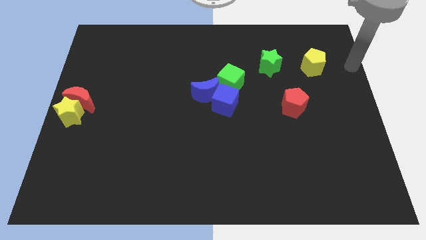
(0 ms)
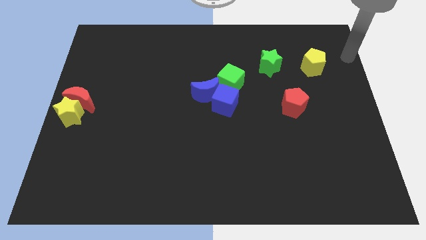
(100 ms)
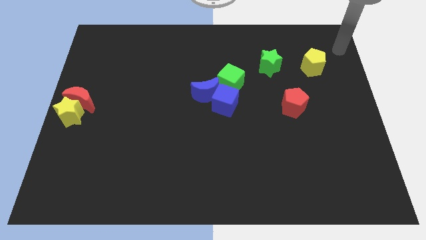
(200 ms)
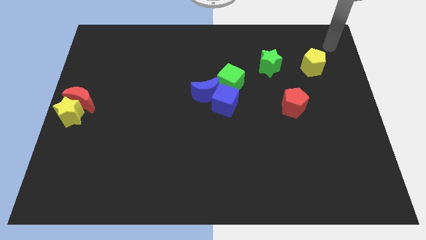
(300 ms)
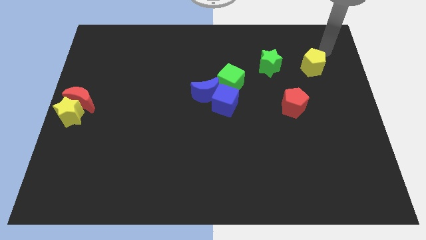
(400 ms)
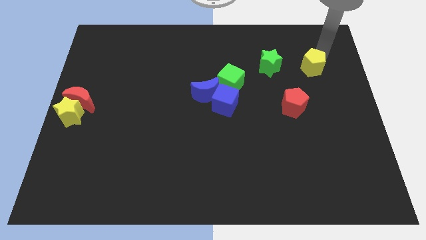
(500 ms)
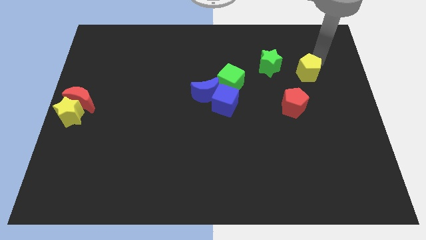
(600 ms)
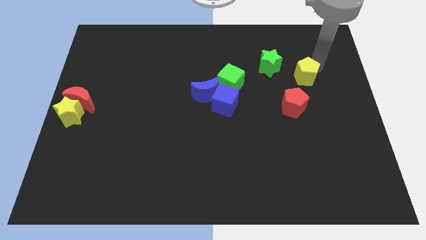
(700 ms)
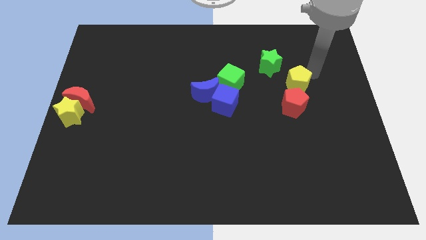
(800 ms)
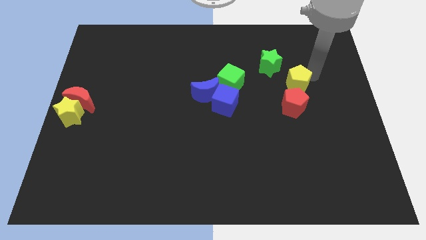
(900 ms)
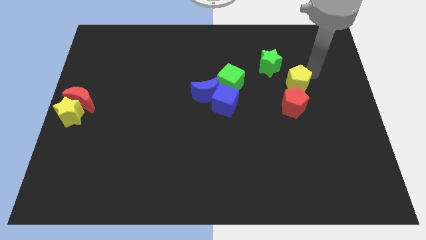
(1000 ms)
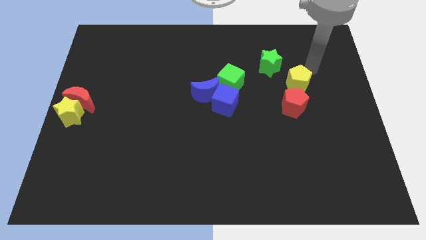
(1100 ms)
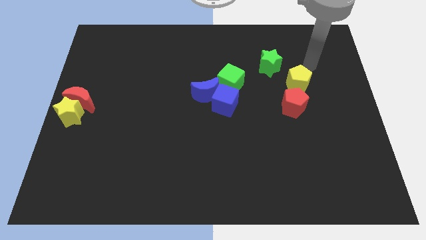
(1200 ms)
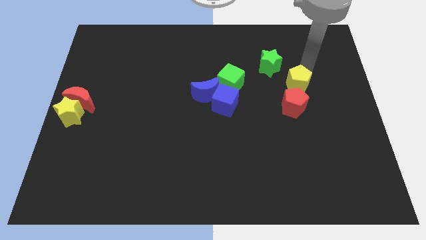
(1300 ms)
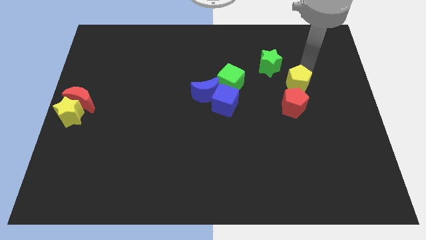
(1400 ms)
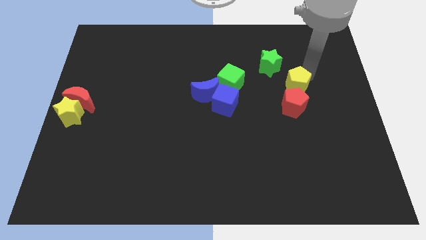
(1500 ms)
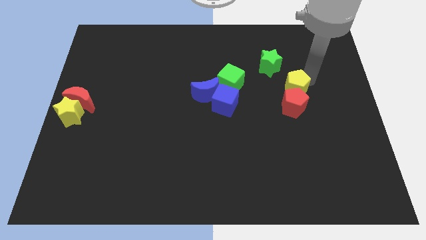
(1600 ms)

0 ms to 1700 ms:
push the yellow pentagon into red pentagon at the right center of the board

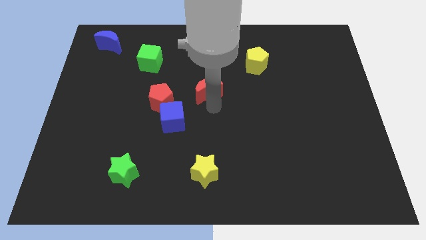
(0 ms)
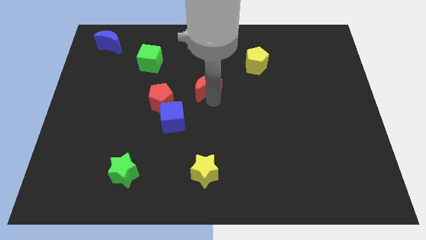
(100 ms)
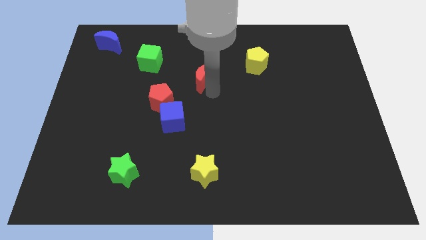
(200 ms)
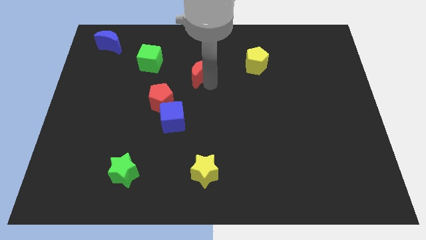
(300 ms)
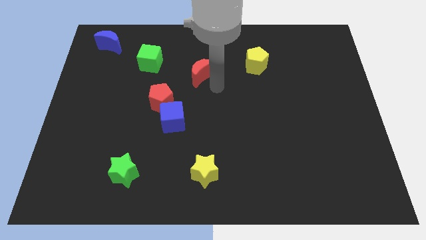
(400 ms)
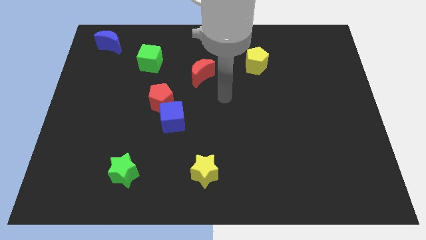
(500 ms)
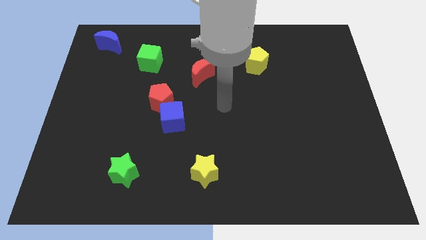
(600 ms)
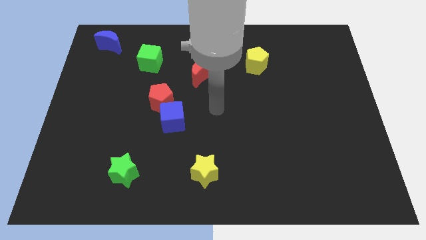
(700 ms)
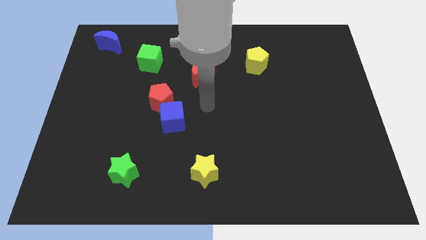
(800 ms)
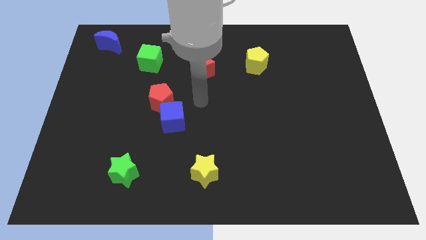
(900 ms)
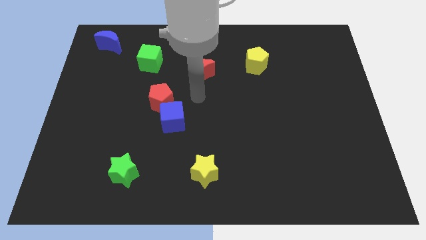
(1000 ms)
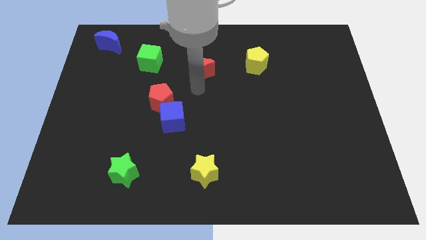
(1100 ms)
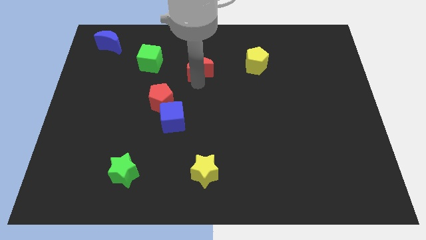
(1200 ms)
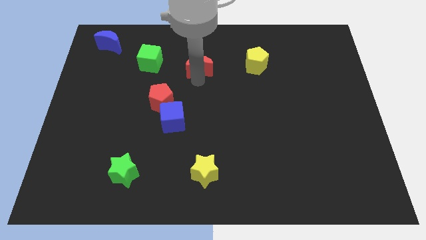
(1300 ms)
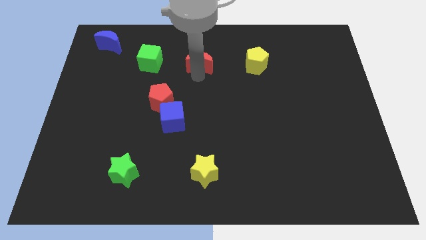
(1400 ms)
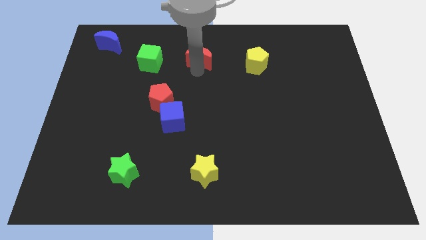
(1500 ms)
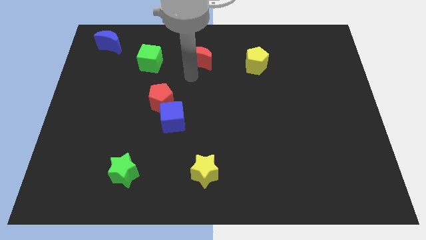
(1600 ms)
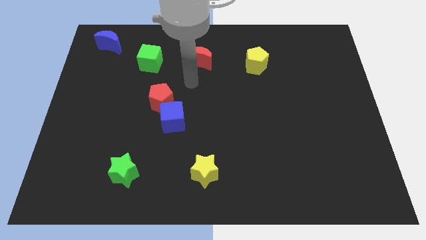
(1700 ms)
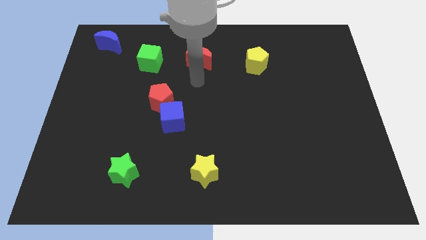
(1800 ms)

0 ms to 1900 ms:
put the red moon between the green cube and yellow pentagon

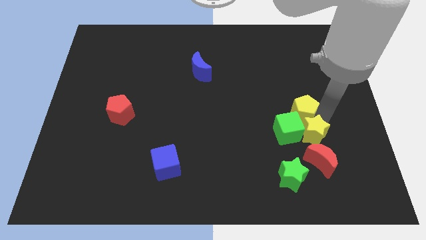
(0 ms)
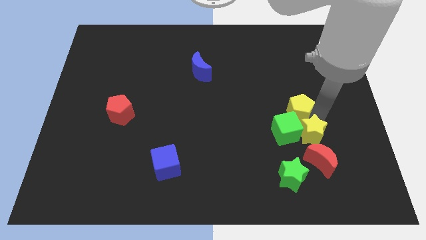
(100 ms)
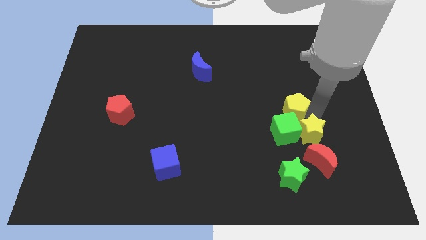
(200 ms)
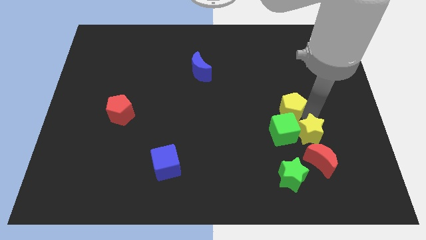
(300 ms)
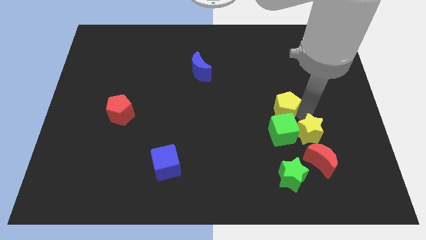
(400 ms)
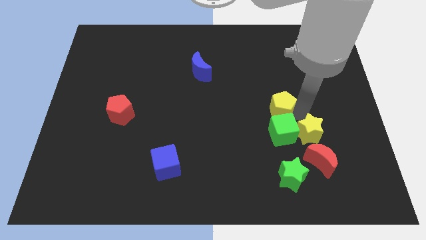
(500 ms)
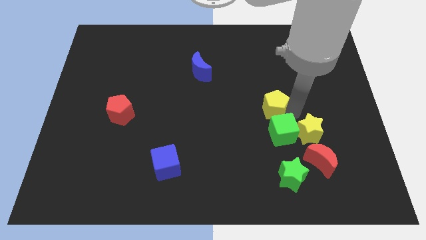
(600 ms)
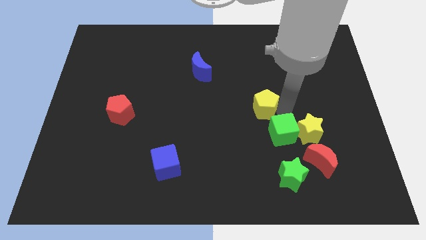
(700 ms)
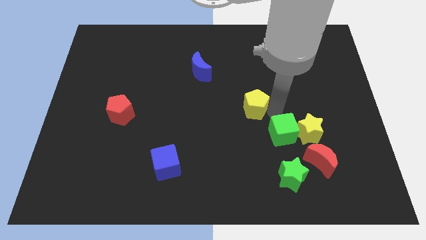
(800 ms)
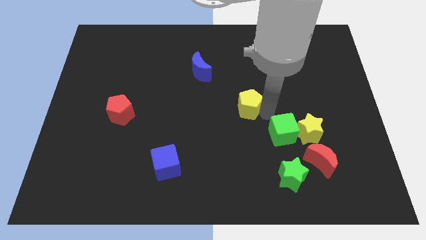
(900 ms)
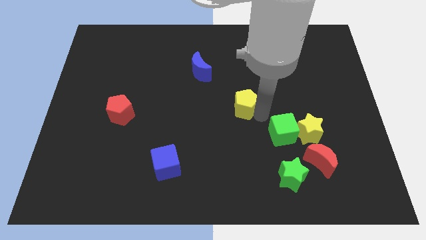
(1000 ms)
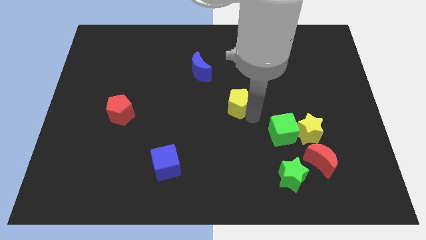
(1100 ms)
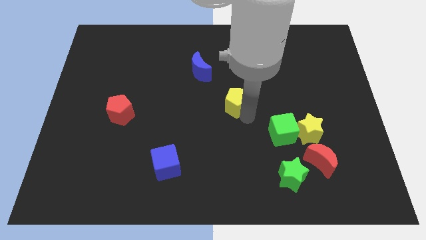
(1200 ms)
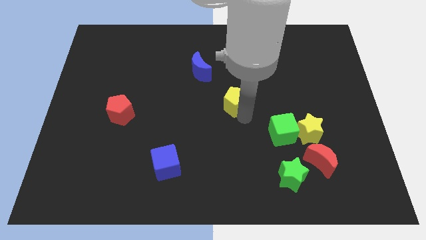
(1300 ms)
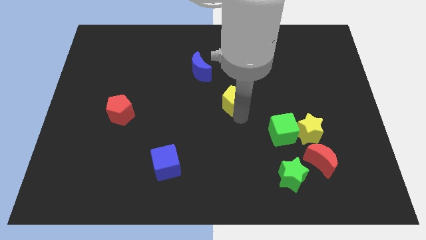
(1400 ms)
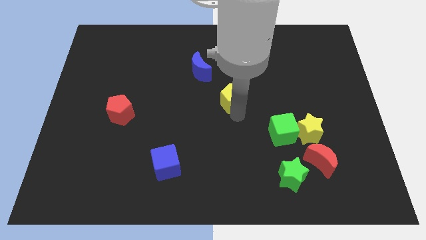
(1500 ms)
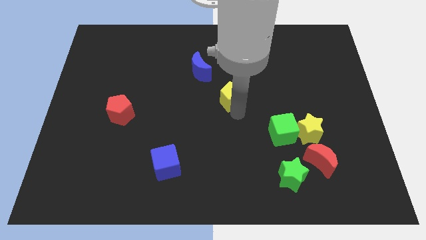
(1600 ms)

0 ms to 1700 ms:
separate the yellow pentagon from the group of blocks

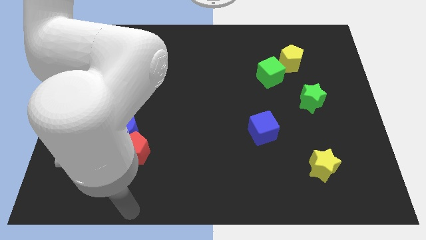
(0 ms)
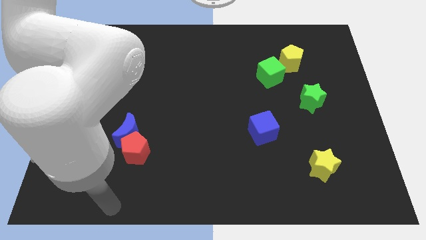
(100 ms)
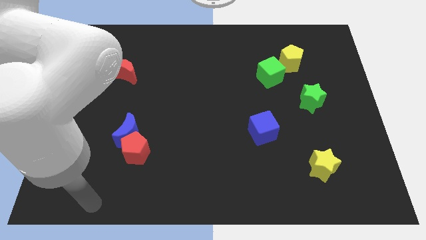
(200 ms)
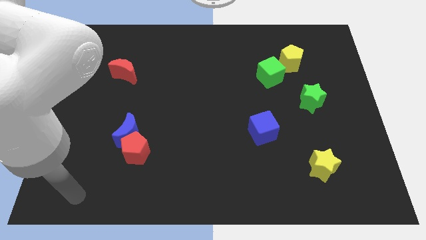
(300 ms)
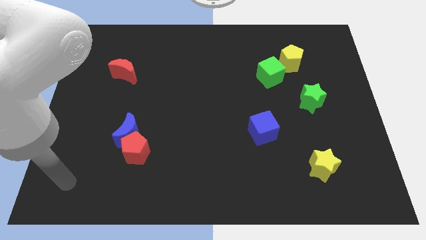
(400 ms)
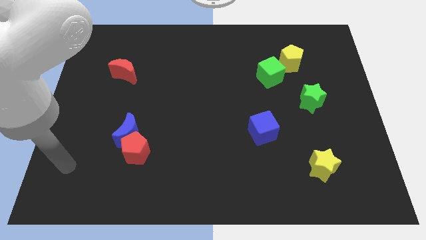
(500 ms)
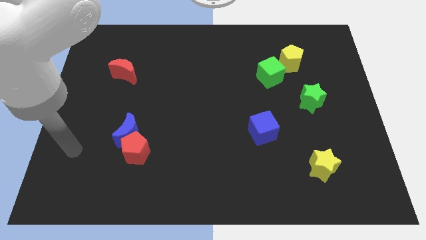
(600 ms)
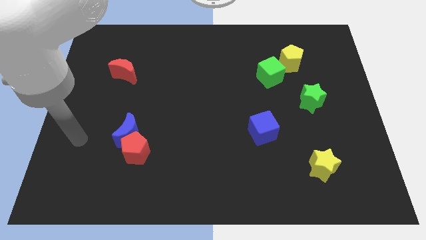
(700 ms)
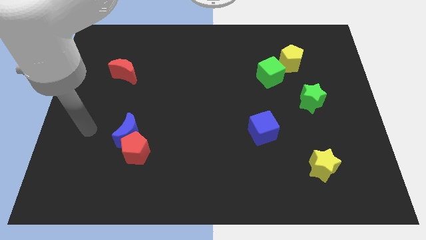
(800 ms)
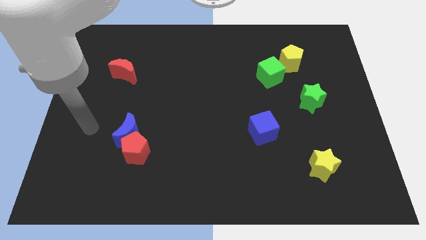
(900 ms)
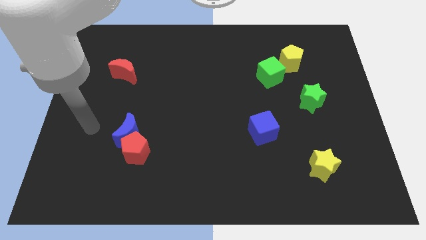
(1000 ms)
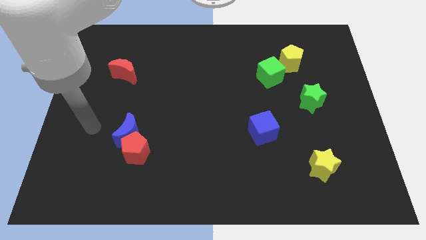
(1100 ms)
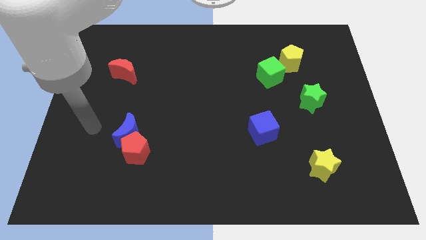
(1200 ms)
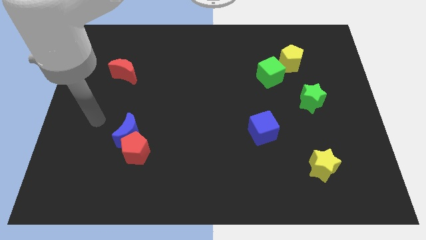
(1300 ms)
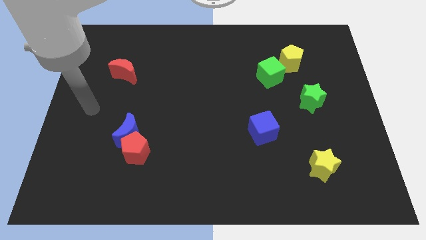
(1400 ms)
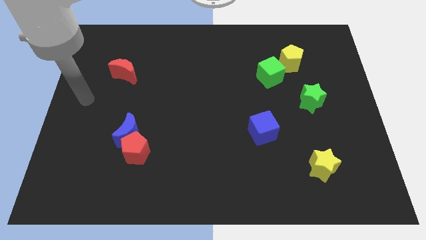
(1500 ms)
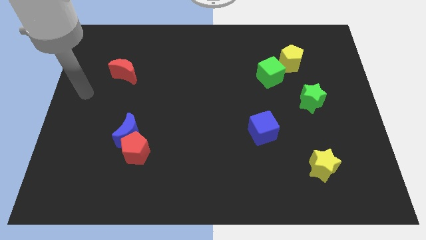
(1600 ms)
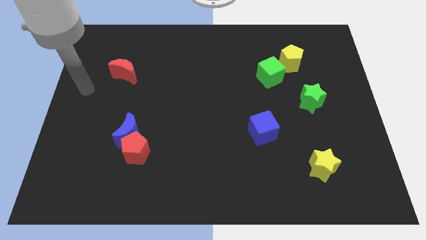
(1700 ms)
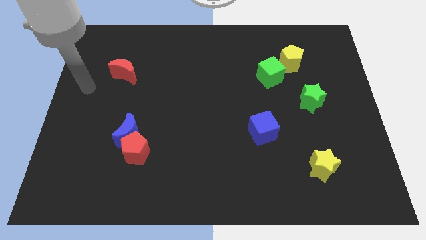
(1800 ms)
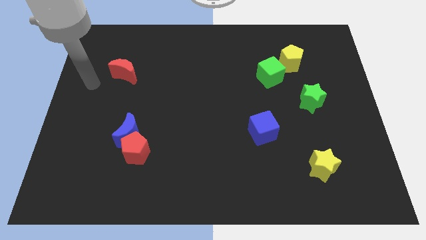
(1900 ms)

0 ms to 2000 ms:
drag your arm towards red moon

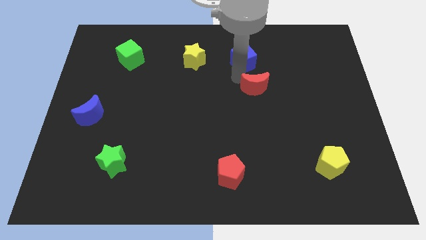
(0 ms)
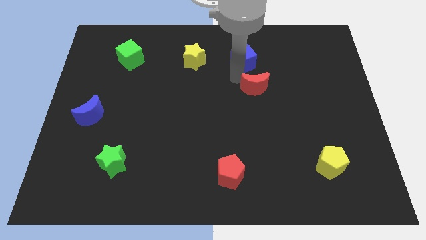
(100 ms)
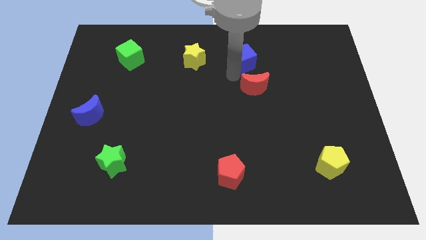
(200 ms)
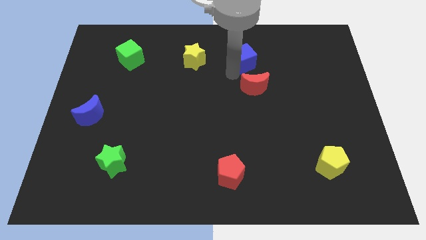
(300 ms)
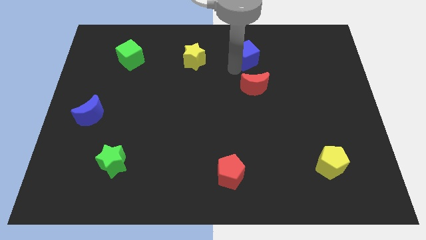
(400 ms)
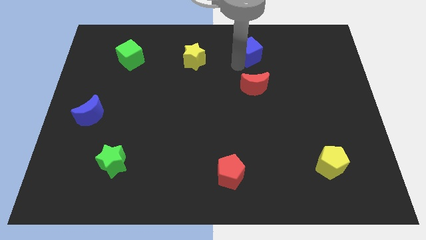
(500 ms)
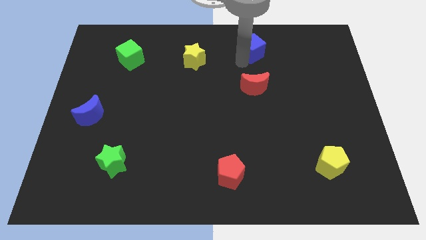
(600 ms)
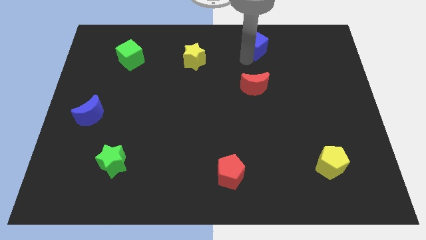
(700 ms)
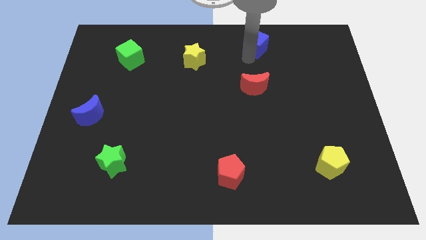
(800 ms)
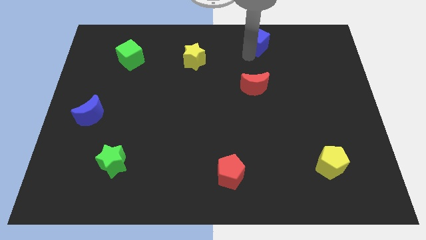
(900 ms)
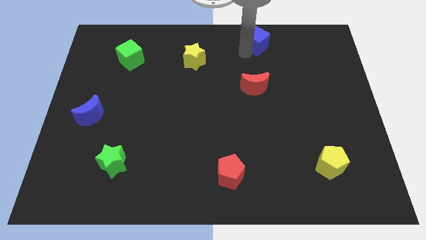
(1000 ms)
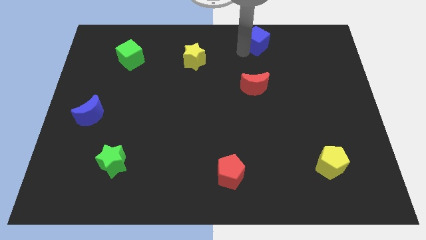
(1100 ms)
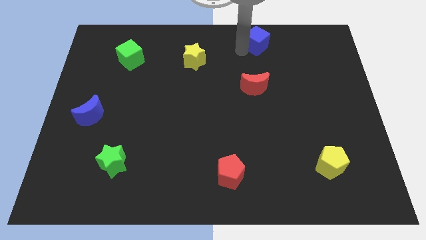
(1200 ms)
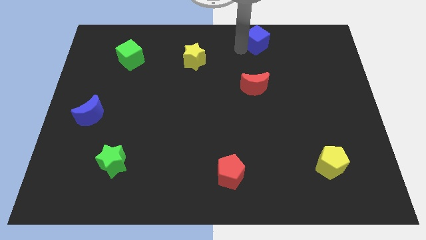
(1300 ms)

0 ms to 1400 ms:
move the blue cube above the red moon

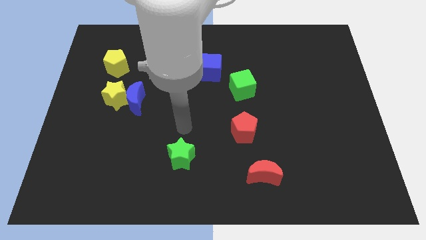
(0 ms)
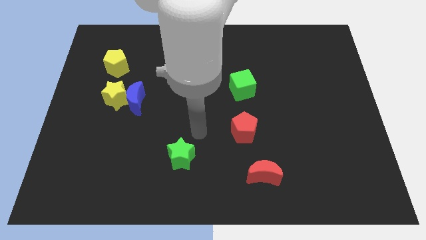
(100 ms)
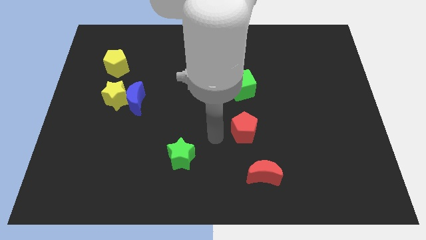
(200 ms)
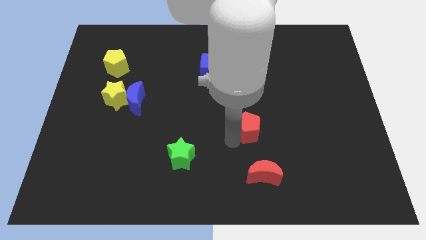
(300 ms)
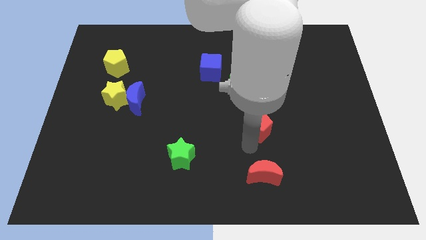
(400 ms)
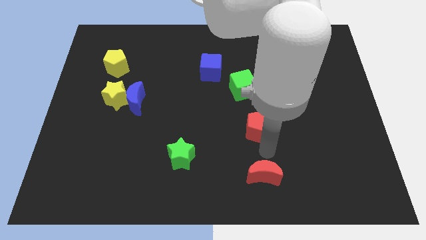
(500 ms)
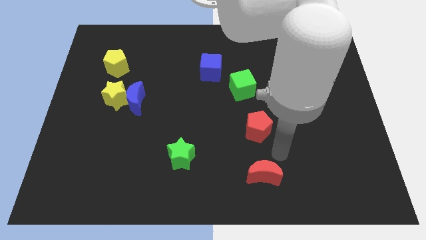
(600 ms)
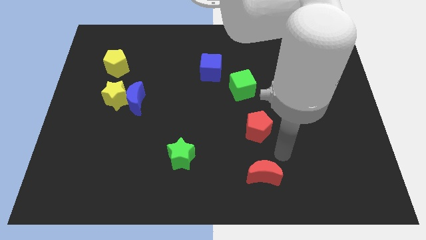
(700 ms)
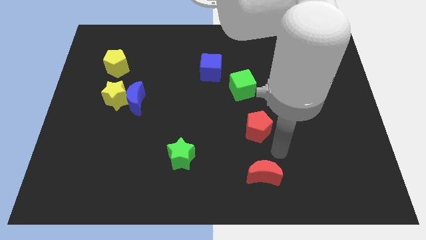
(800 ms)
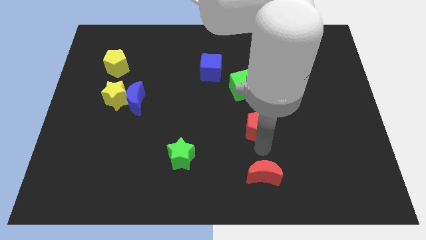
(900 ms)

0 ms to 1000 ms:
touch the bottom of red pentagon
